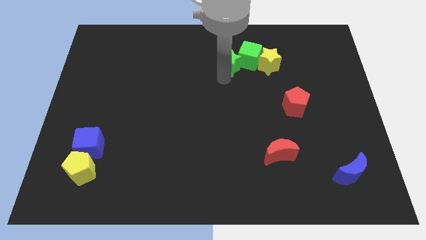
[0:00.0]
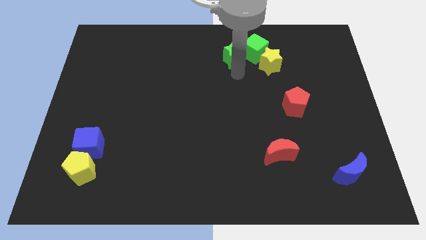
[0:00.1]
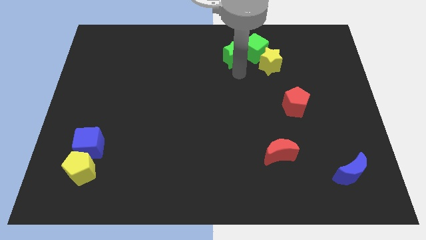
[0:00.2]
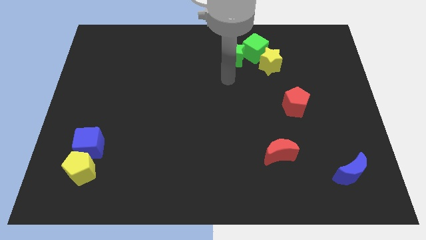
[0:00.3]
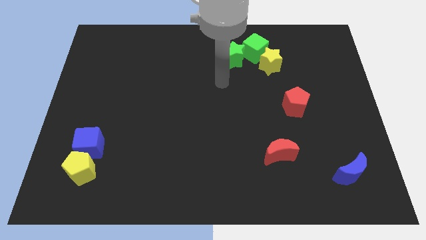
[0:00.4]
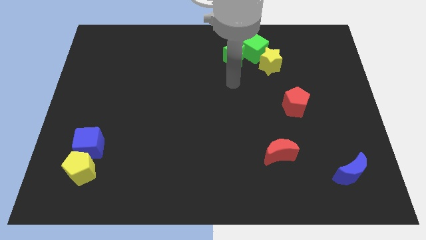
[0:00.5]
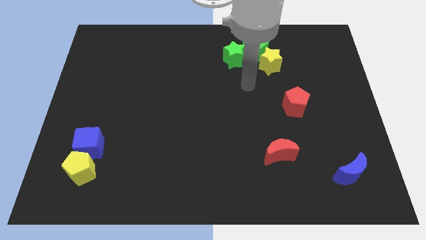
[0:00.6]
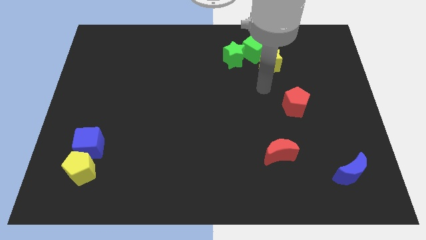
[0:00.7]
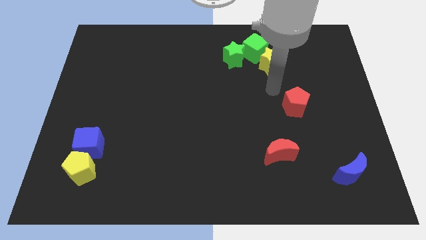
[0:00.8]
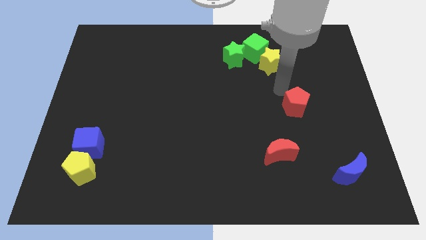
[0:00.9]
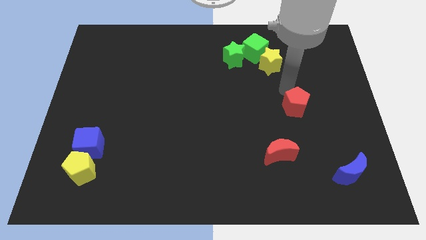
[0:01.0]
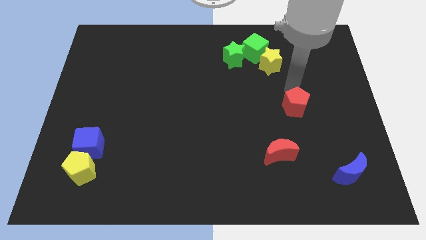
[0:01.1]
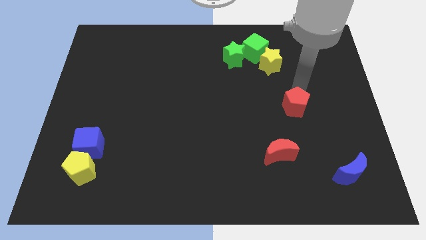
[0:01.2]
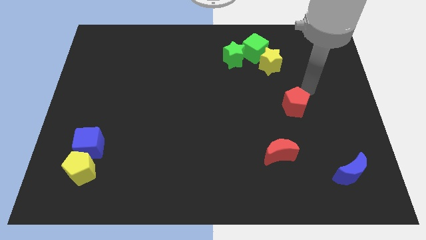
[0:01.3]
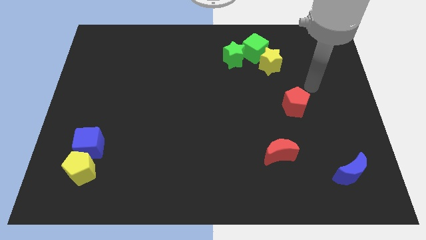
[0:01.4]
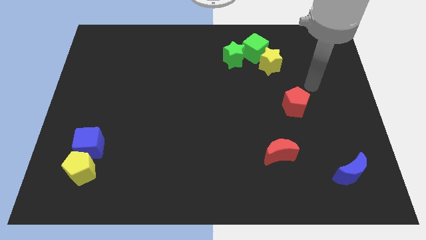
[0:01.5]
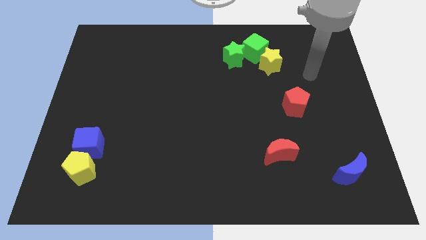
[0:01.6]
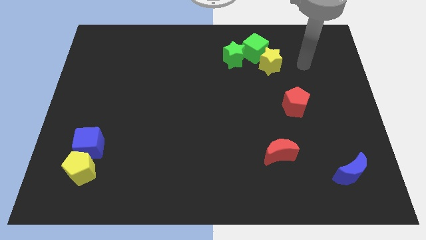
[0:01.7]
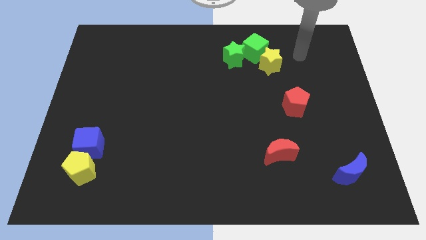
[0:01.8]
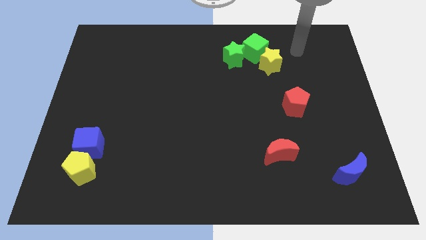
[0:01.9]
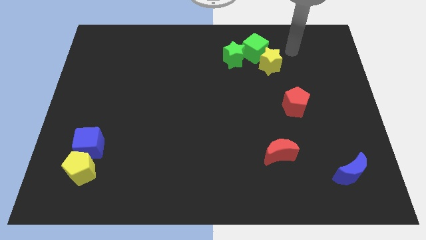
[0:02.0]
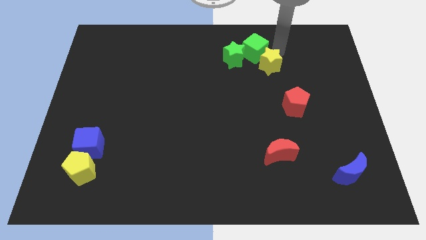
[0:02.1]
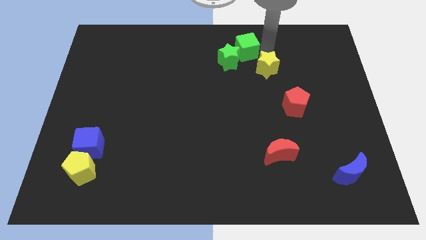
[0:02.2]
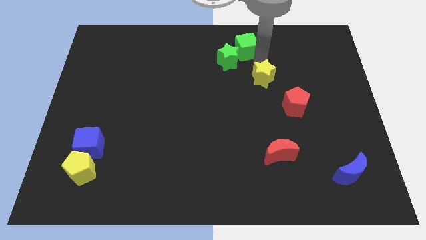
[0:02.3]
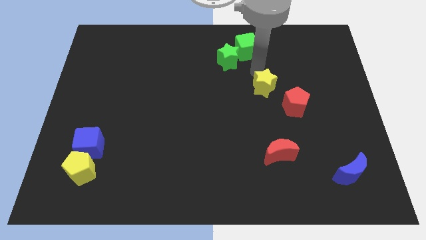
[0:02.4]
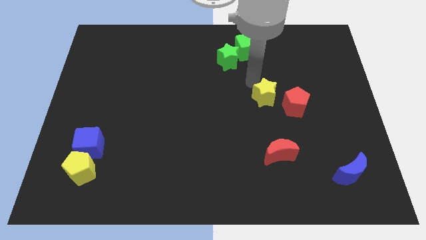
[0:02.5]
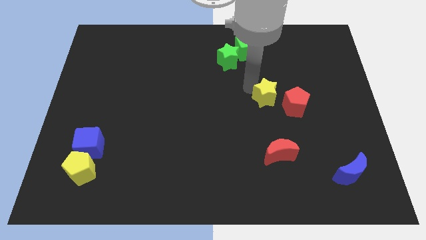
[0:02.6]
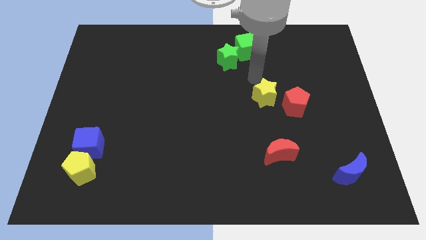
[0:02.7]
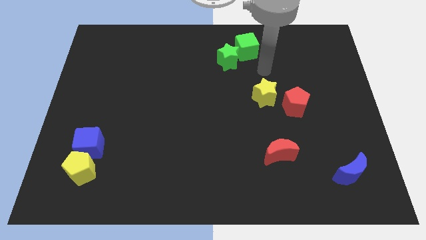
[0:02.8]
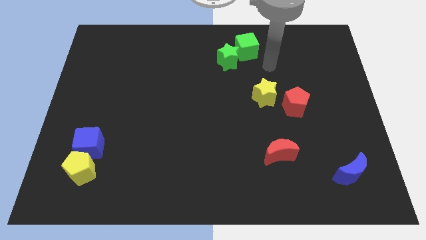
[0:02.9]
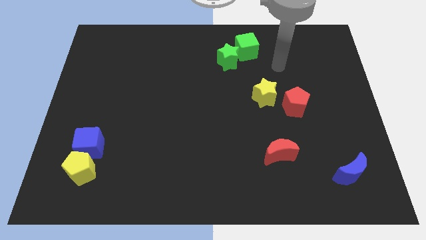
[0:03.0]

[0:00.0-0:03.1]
move the yellow star to the left side of the red pentagon

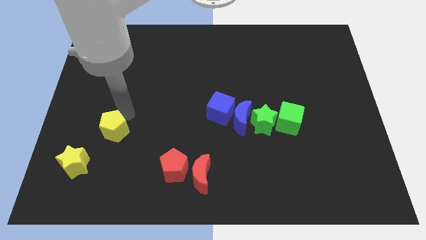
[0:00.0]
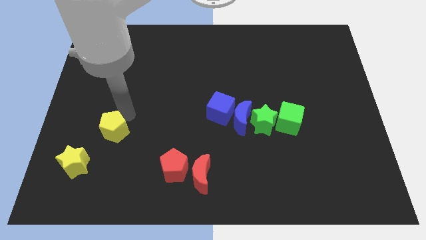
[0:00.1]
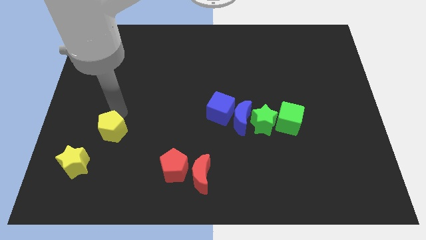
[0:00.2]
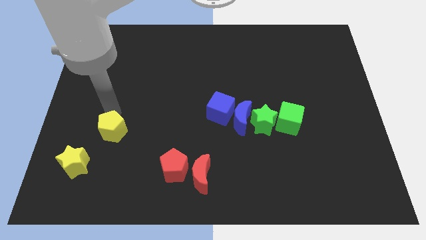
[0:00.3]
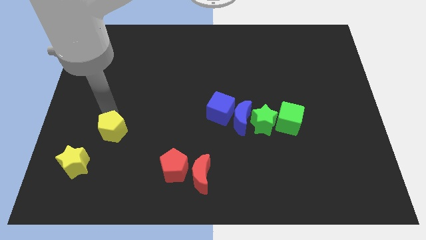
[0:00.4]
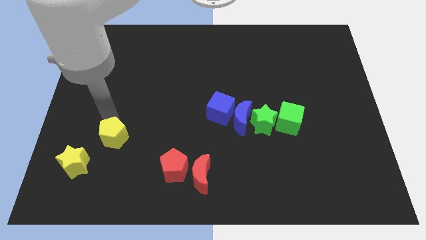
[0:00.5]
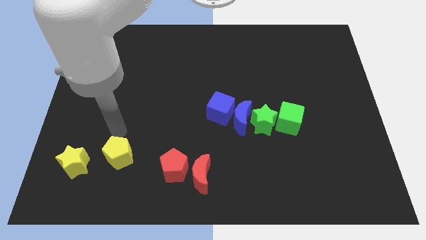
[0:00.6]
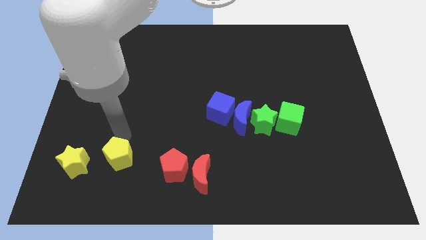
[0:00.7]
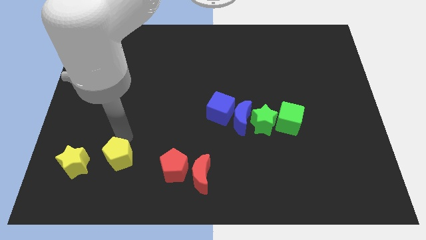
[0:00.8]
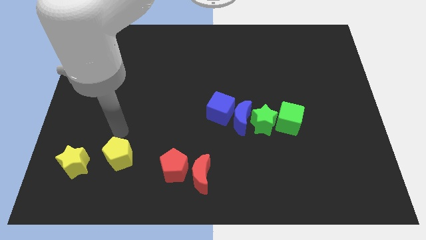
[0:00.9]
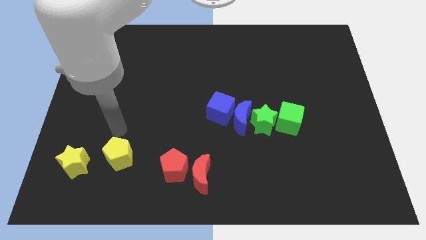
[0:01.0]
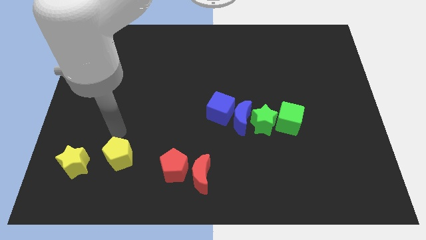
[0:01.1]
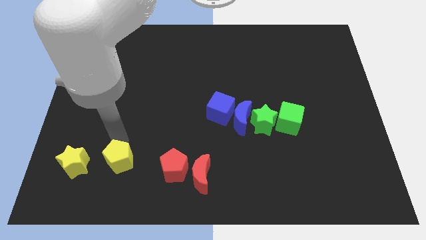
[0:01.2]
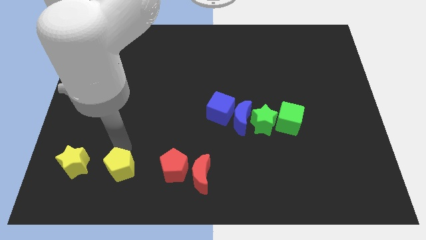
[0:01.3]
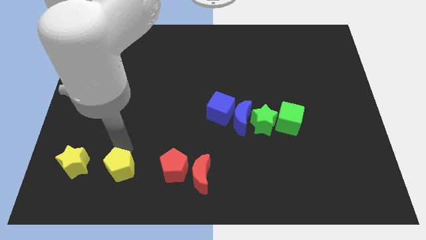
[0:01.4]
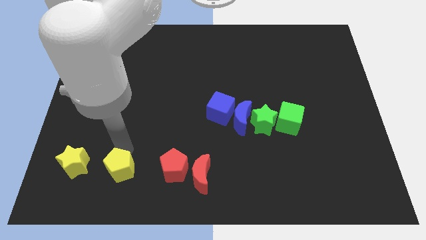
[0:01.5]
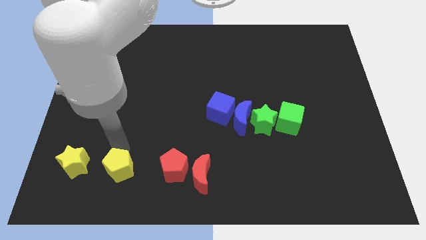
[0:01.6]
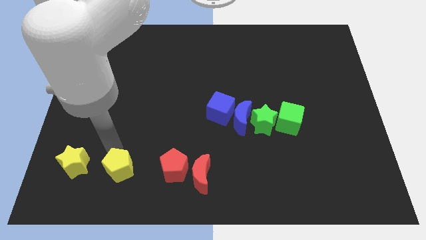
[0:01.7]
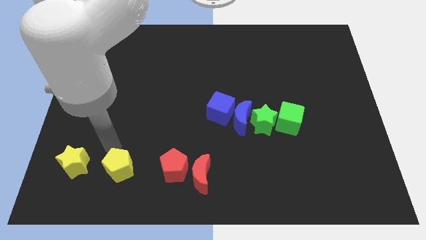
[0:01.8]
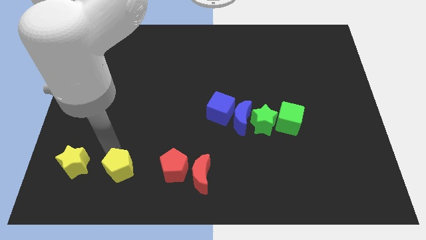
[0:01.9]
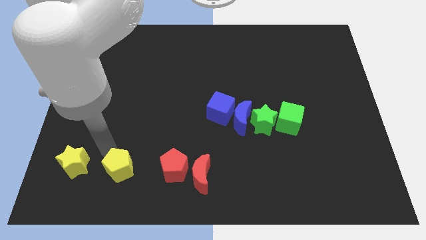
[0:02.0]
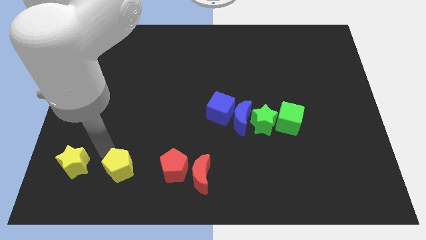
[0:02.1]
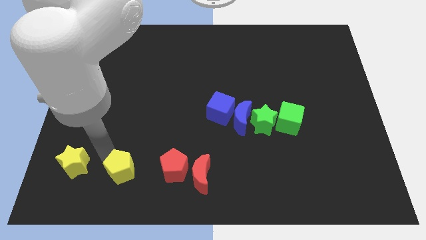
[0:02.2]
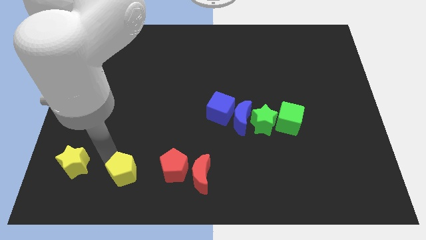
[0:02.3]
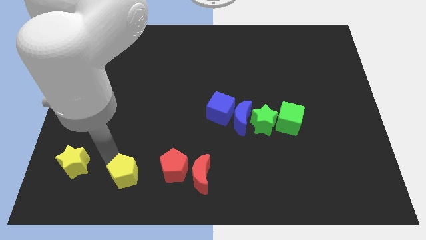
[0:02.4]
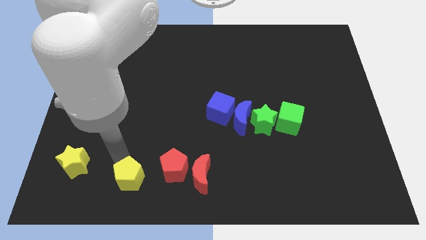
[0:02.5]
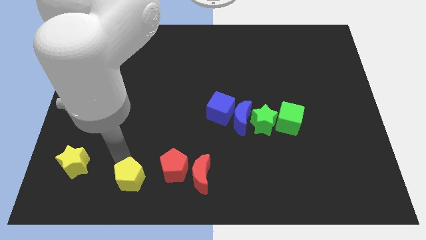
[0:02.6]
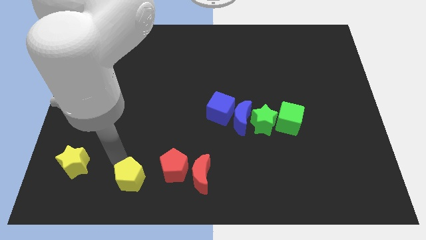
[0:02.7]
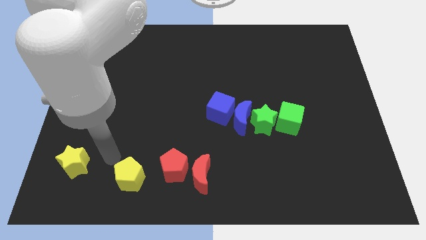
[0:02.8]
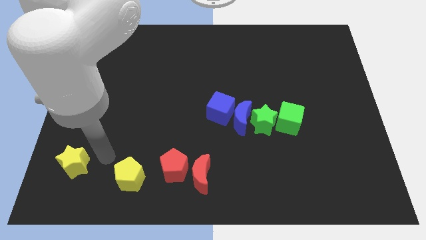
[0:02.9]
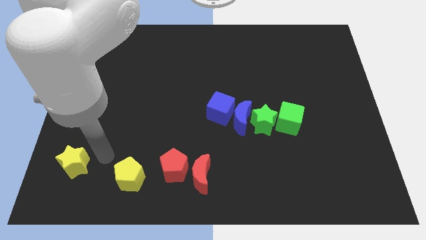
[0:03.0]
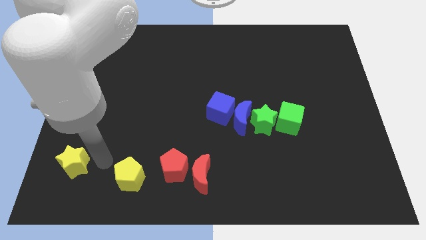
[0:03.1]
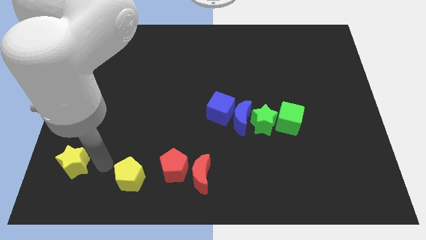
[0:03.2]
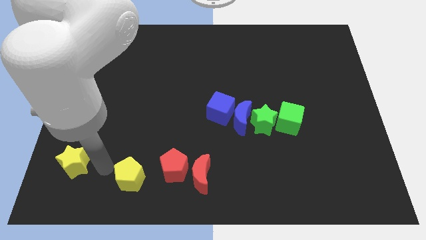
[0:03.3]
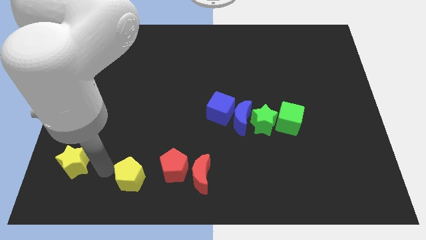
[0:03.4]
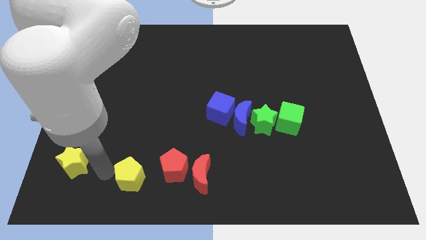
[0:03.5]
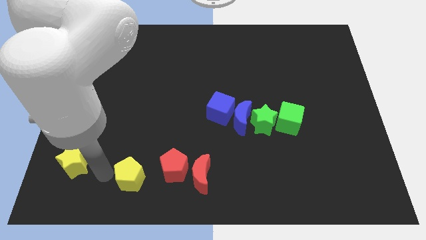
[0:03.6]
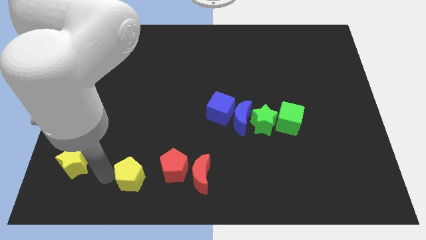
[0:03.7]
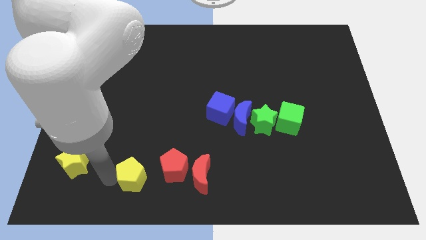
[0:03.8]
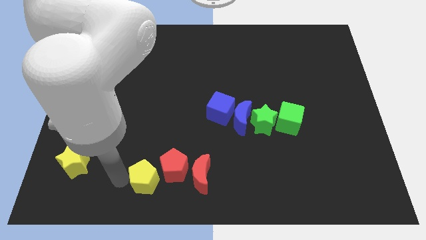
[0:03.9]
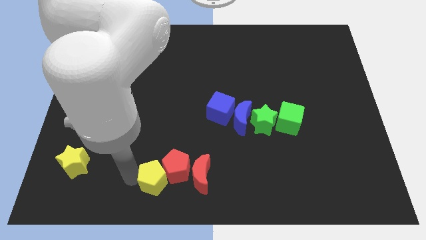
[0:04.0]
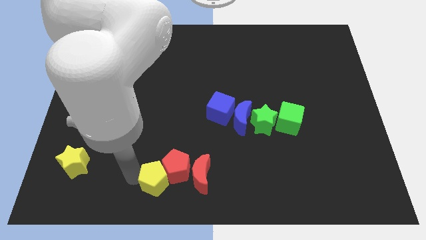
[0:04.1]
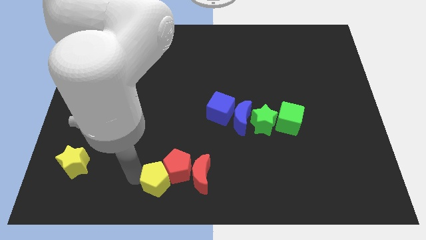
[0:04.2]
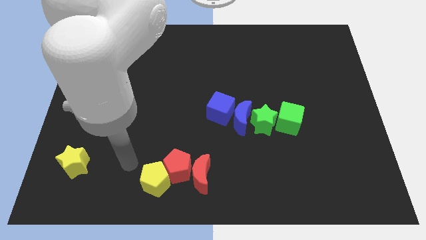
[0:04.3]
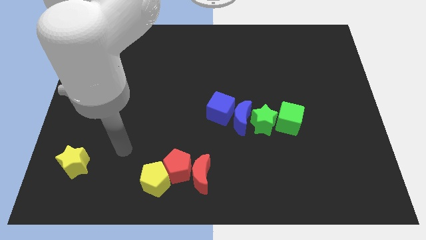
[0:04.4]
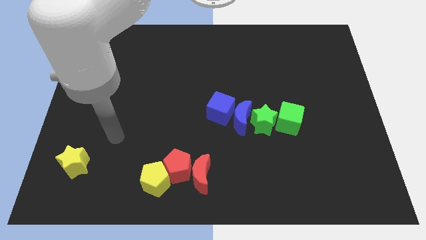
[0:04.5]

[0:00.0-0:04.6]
push the yellow pentagon to the left side of the red pentagon

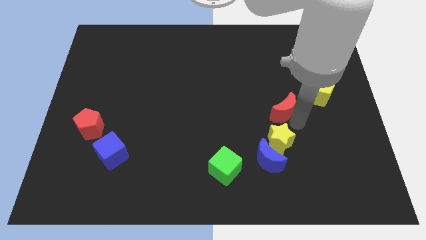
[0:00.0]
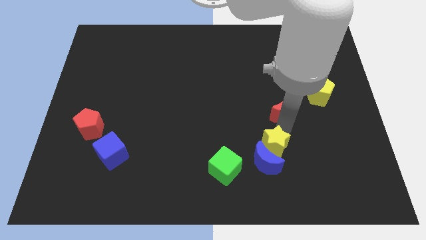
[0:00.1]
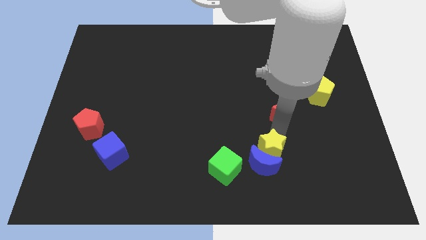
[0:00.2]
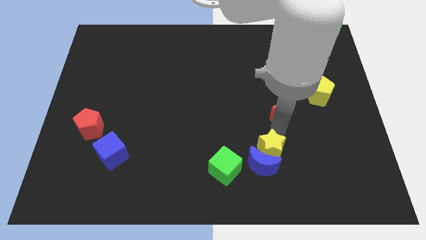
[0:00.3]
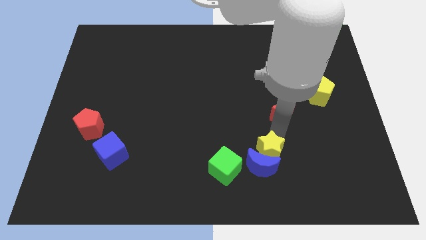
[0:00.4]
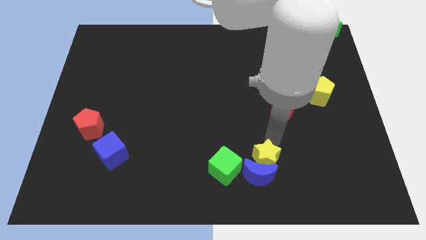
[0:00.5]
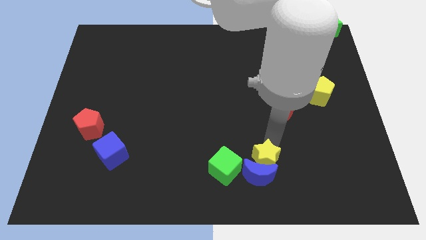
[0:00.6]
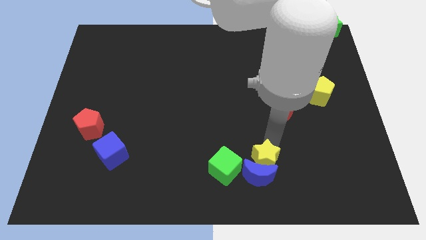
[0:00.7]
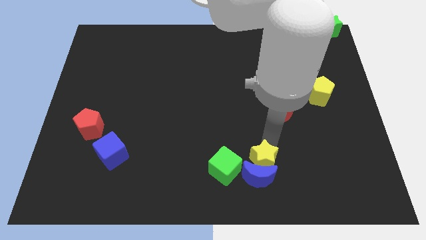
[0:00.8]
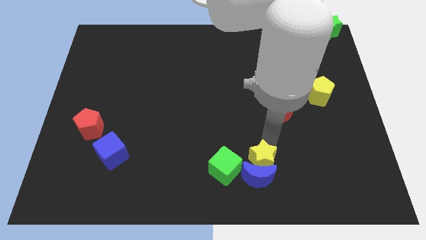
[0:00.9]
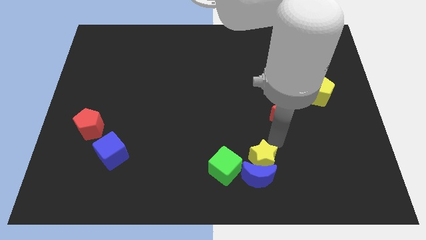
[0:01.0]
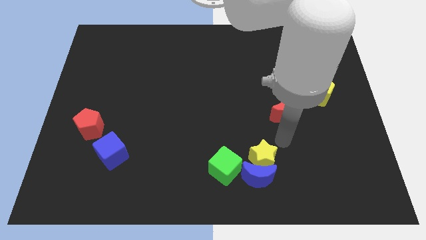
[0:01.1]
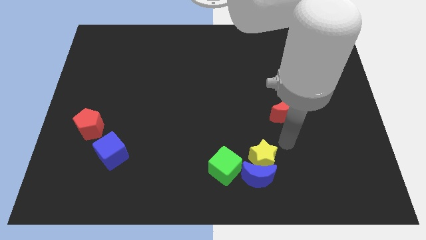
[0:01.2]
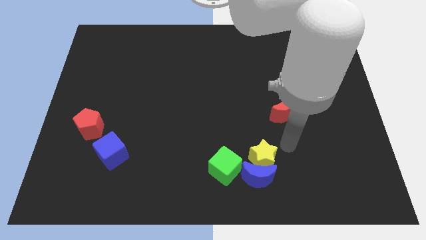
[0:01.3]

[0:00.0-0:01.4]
push the yellow star along with blue crescent to the right of the green cube
